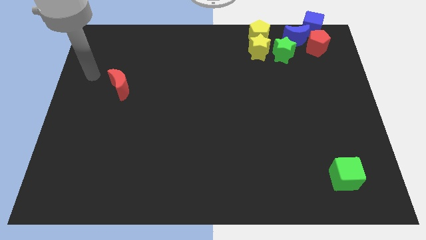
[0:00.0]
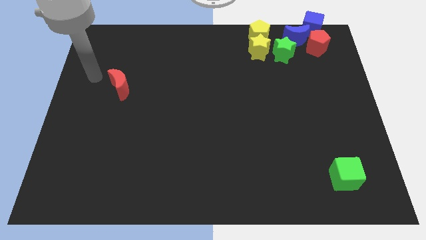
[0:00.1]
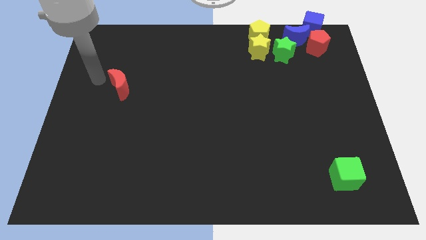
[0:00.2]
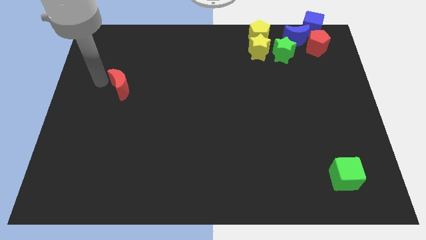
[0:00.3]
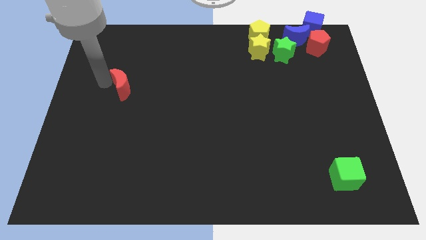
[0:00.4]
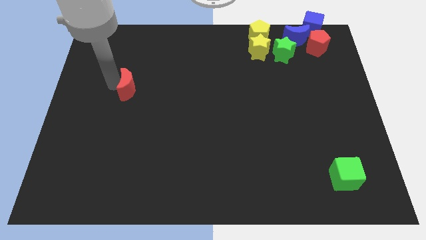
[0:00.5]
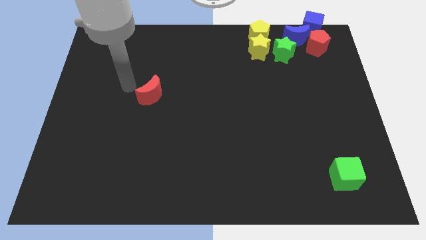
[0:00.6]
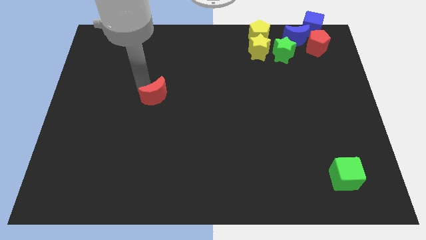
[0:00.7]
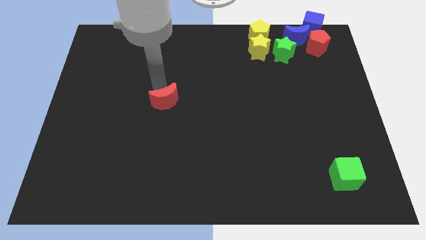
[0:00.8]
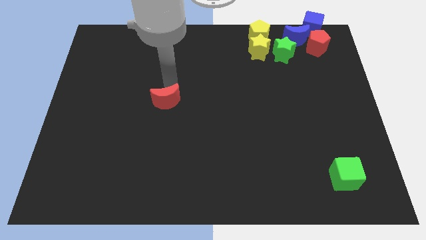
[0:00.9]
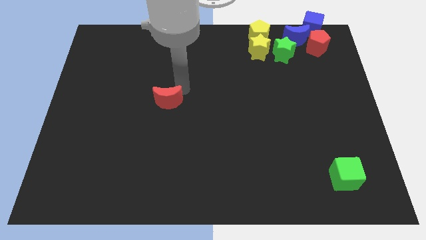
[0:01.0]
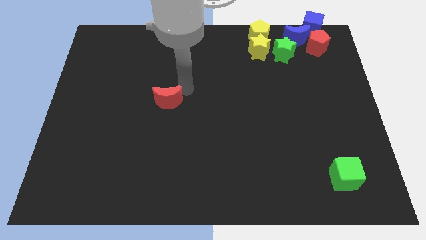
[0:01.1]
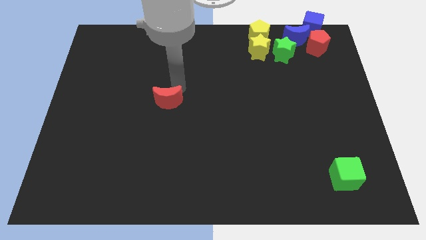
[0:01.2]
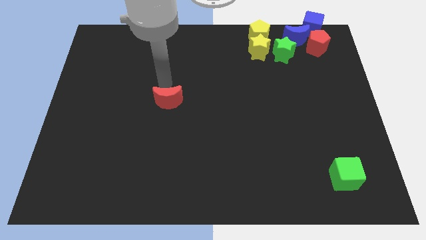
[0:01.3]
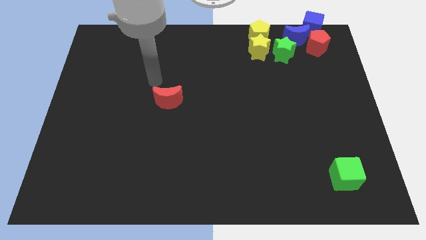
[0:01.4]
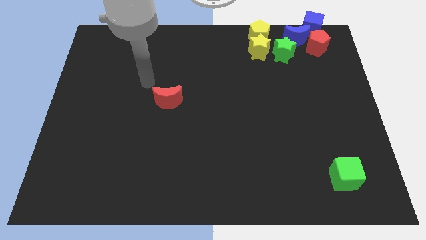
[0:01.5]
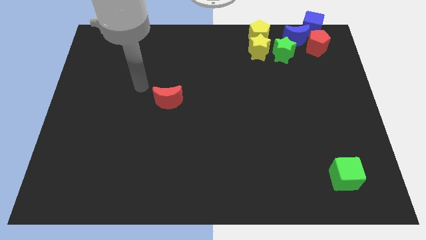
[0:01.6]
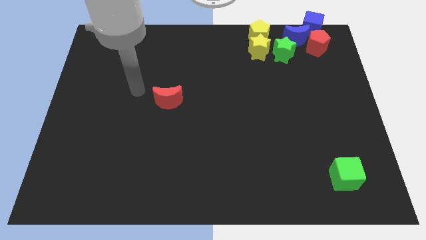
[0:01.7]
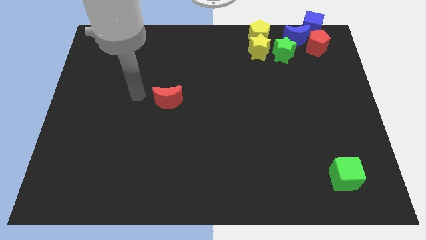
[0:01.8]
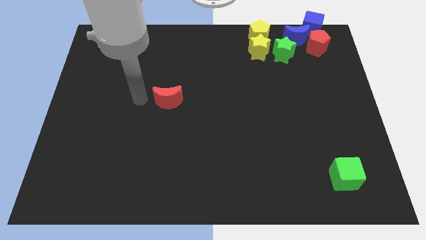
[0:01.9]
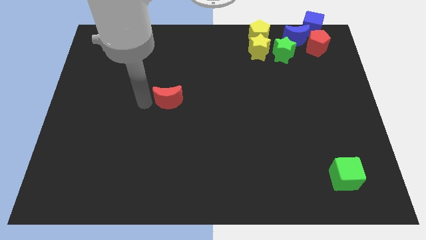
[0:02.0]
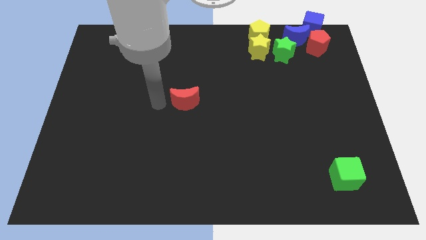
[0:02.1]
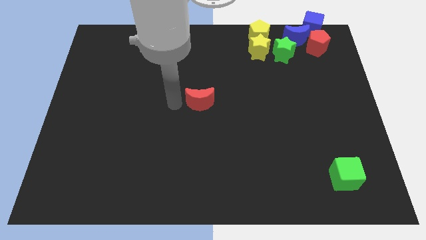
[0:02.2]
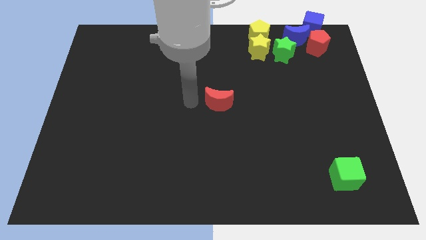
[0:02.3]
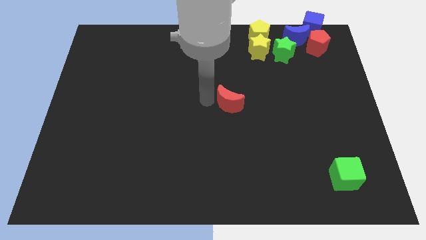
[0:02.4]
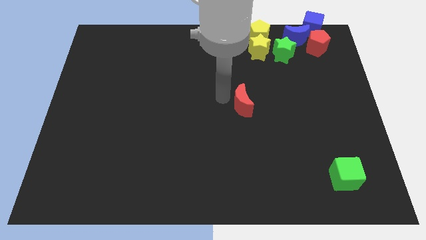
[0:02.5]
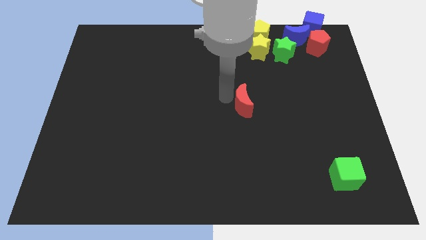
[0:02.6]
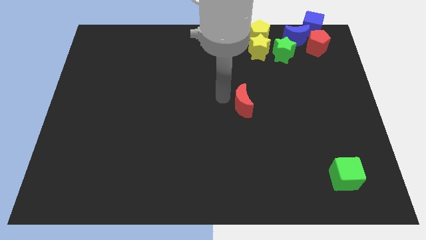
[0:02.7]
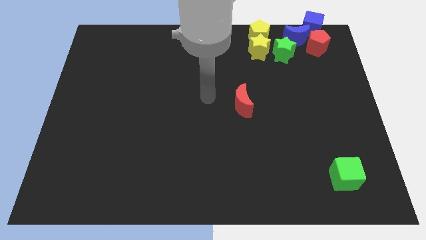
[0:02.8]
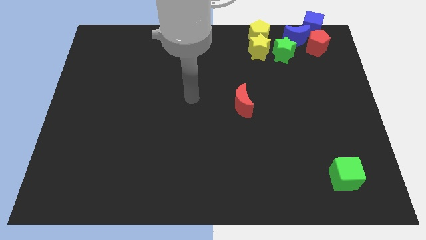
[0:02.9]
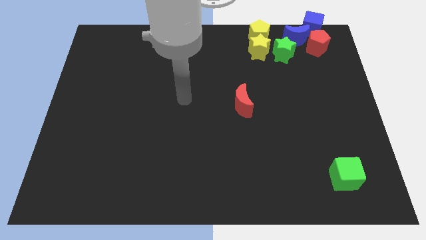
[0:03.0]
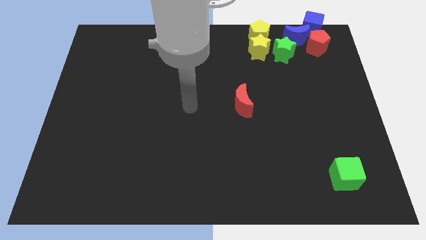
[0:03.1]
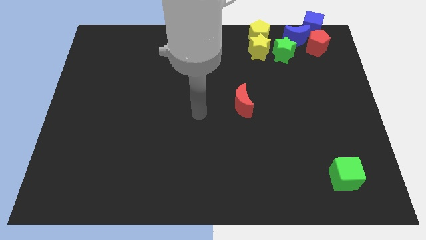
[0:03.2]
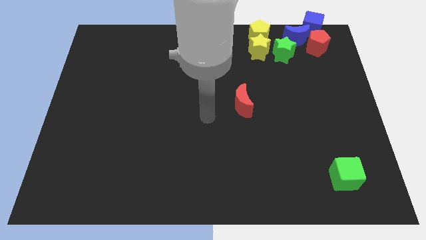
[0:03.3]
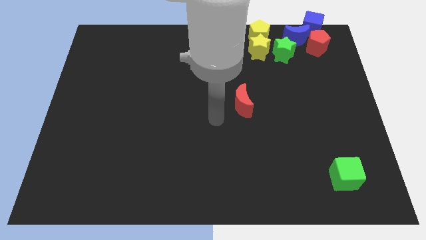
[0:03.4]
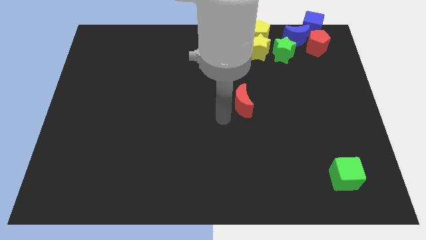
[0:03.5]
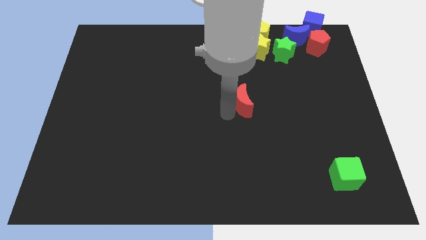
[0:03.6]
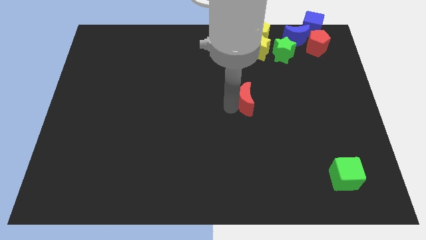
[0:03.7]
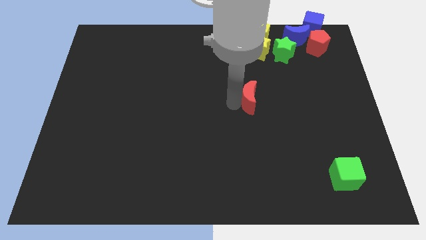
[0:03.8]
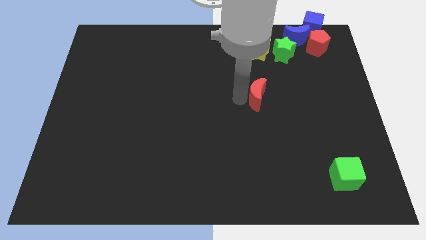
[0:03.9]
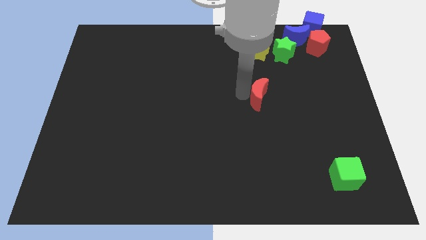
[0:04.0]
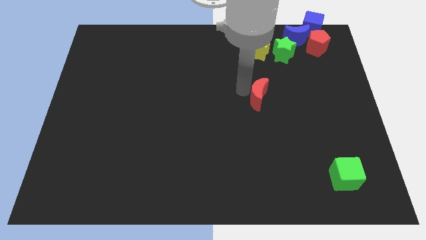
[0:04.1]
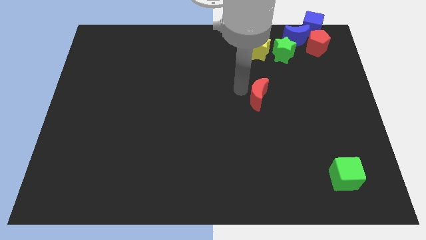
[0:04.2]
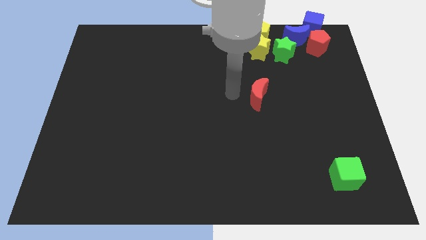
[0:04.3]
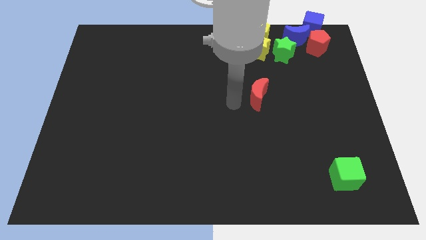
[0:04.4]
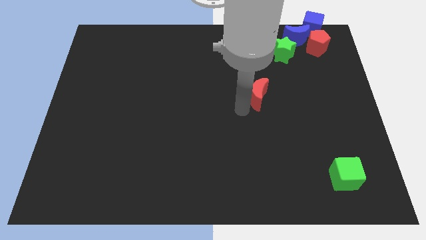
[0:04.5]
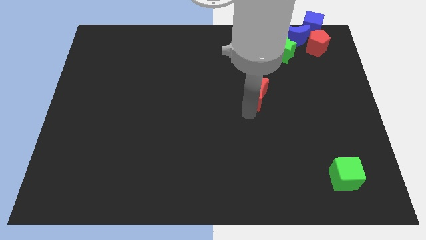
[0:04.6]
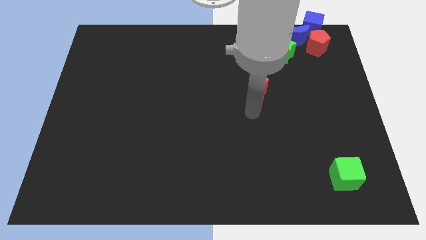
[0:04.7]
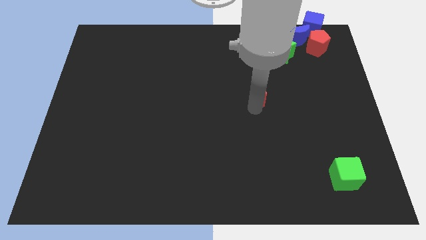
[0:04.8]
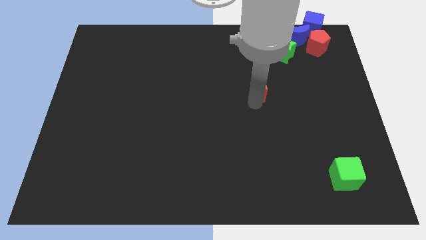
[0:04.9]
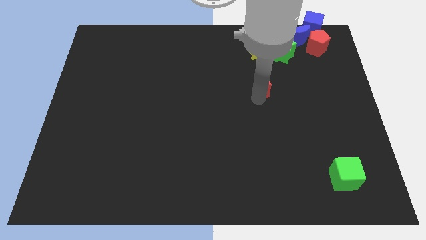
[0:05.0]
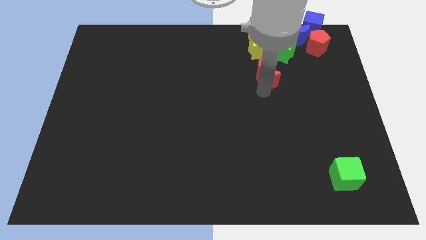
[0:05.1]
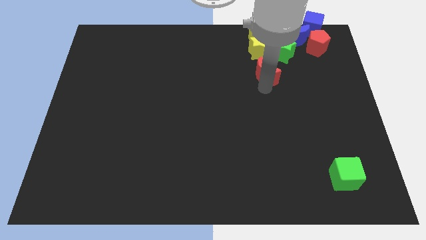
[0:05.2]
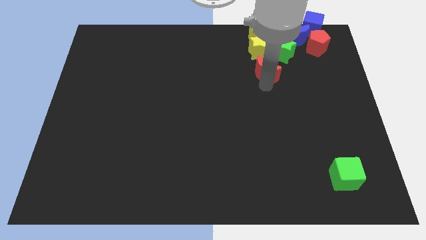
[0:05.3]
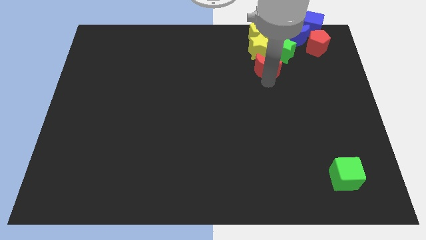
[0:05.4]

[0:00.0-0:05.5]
place red crescent close to yellow star

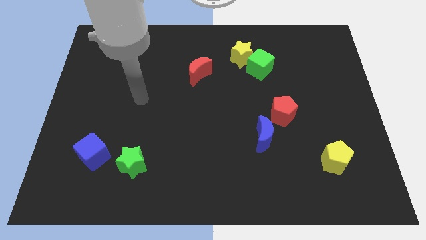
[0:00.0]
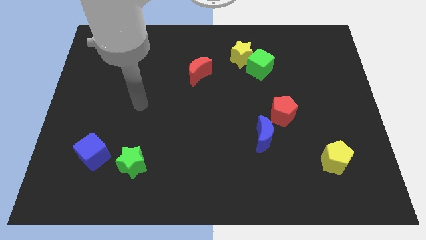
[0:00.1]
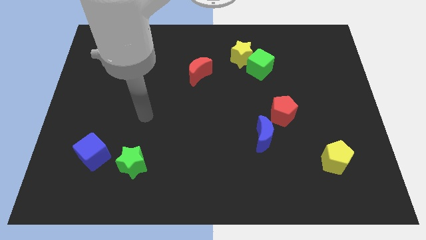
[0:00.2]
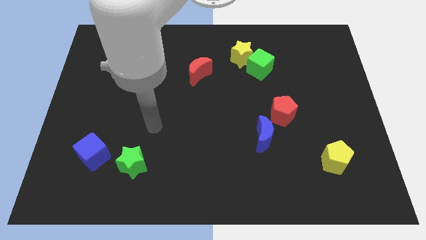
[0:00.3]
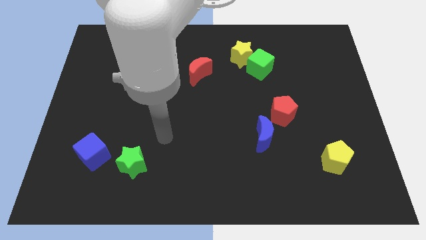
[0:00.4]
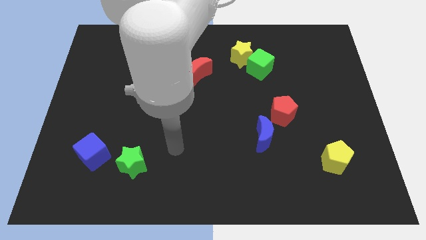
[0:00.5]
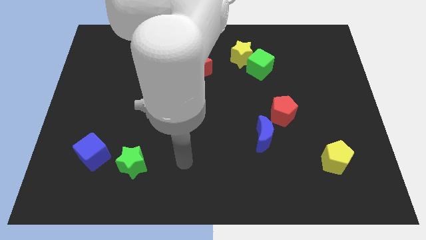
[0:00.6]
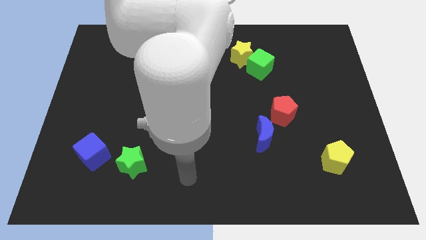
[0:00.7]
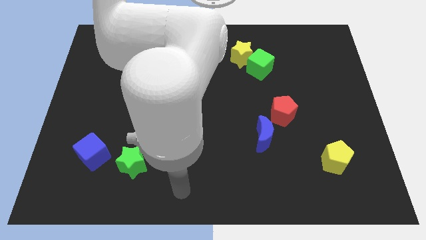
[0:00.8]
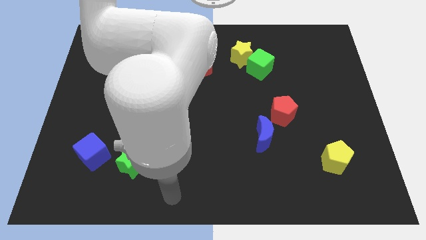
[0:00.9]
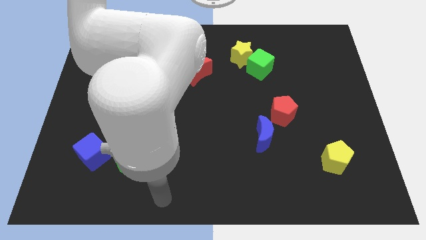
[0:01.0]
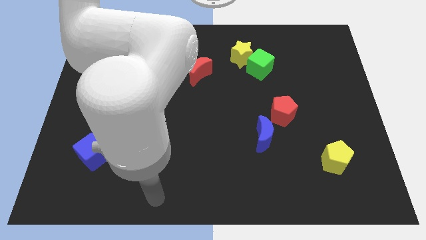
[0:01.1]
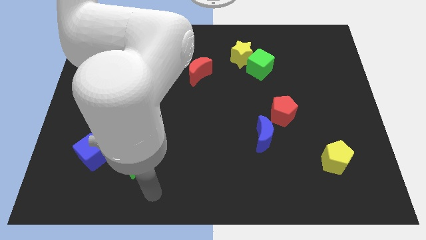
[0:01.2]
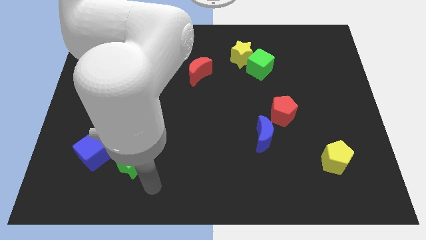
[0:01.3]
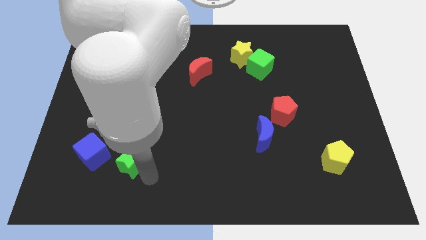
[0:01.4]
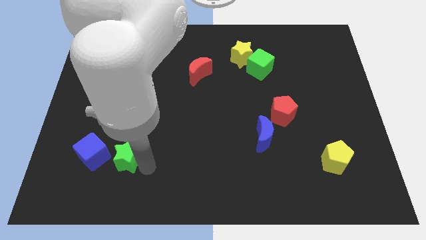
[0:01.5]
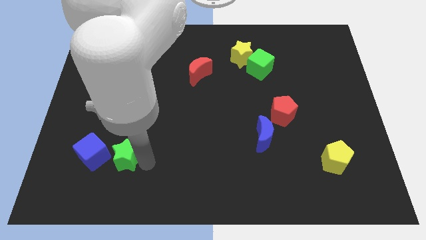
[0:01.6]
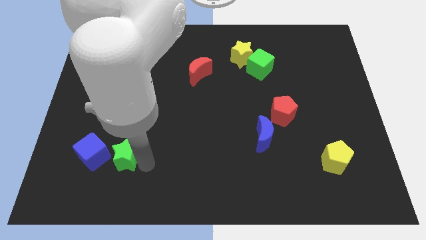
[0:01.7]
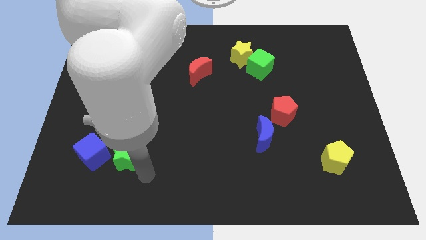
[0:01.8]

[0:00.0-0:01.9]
slightly push the green star to the right of blue cube

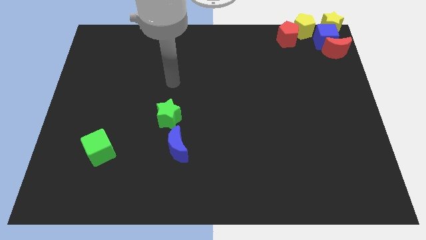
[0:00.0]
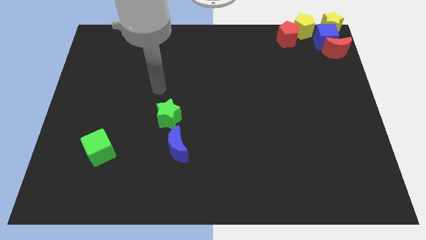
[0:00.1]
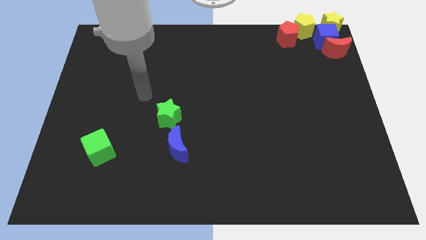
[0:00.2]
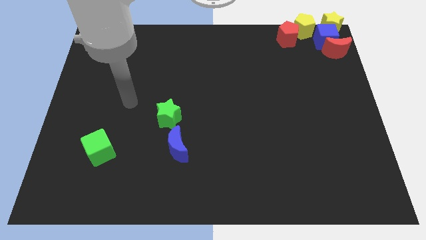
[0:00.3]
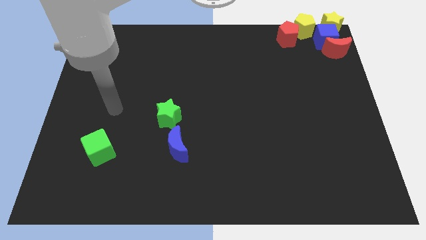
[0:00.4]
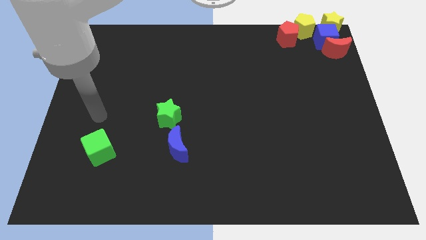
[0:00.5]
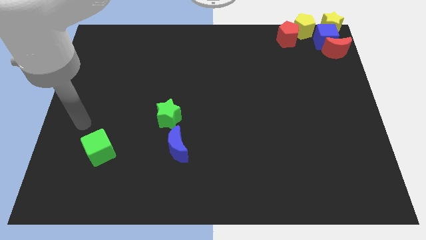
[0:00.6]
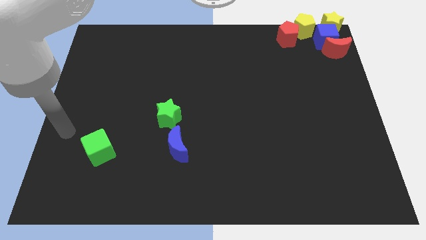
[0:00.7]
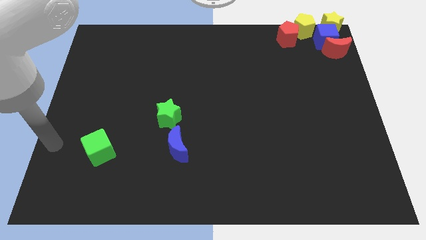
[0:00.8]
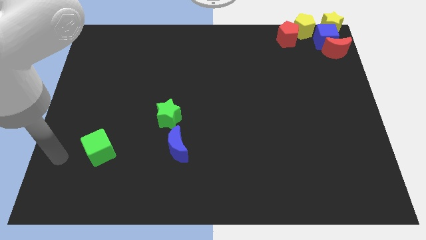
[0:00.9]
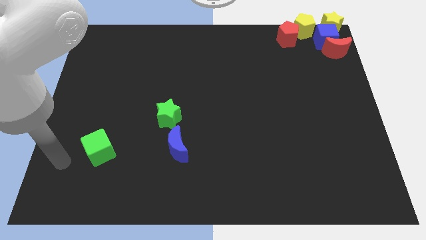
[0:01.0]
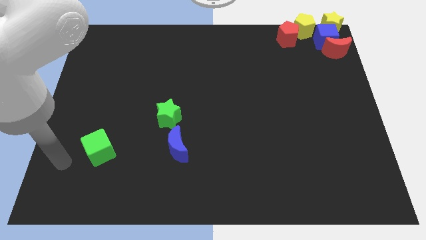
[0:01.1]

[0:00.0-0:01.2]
push the green cube towards the bottom side of the board

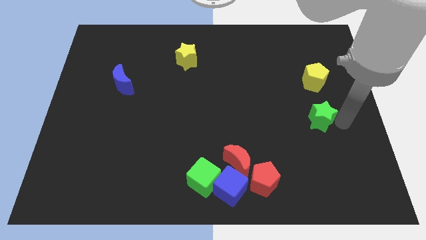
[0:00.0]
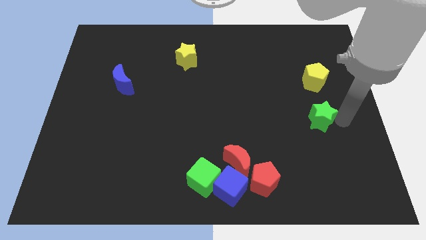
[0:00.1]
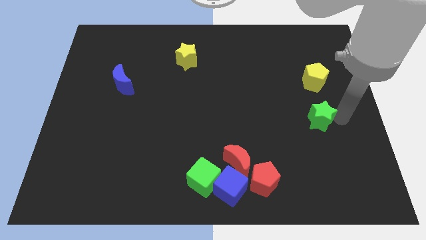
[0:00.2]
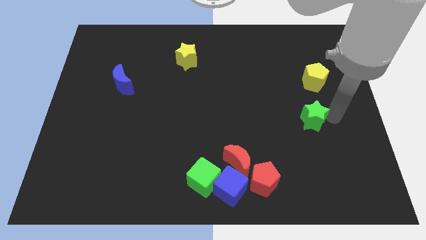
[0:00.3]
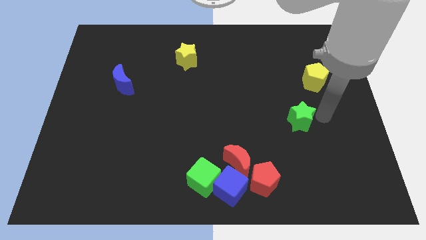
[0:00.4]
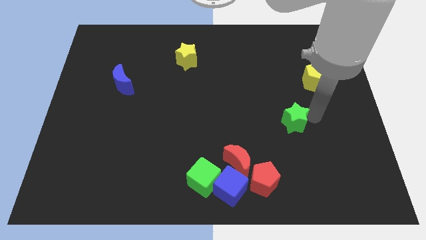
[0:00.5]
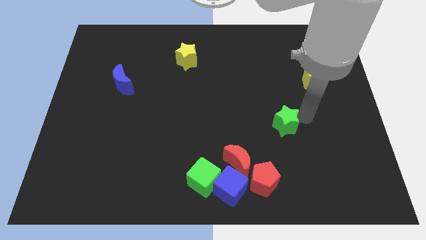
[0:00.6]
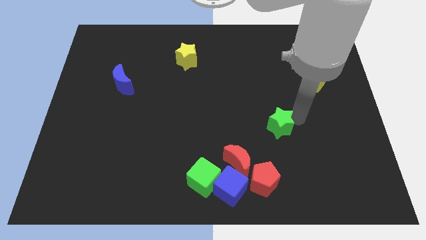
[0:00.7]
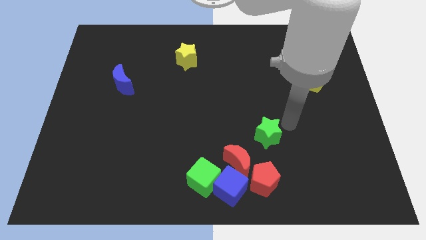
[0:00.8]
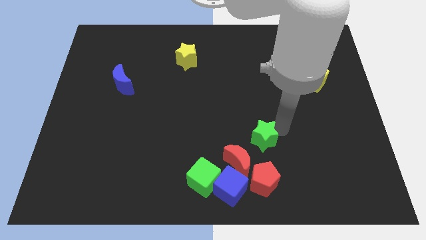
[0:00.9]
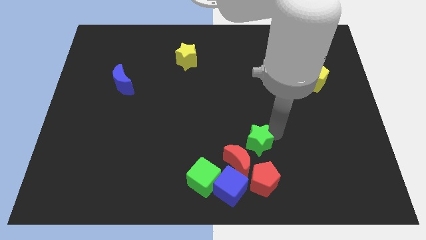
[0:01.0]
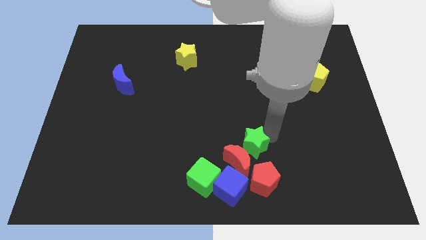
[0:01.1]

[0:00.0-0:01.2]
move the green star to the top of the red moon
